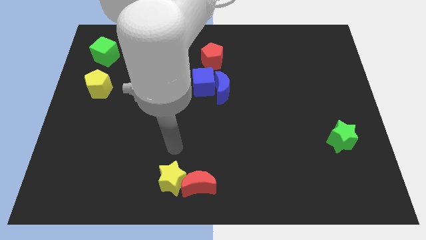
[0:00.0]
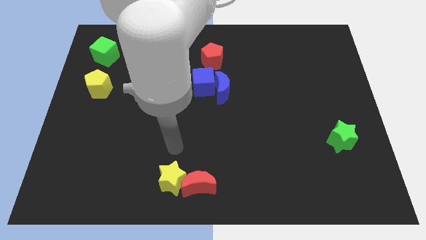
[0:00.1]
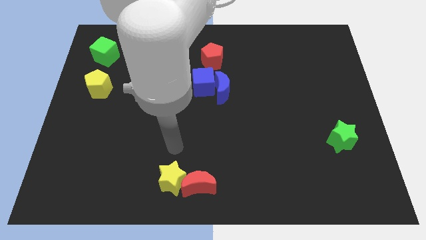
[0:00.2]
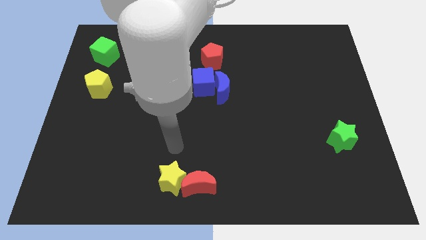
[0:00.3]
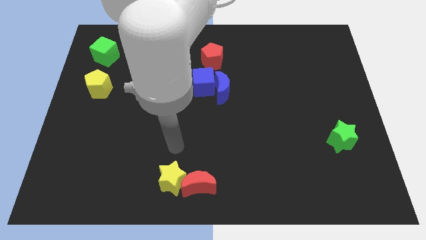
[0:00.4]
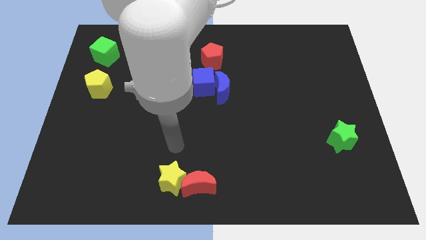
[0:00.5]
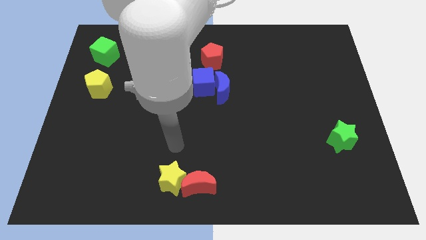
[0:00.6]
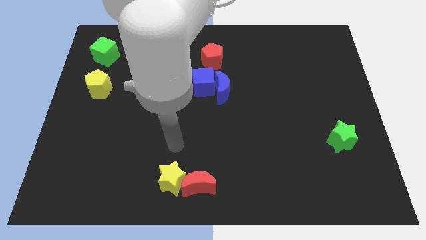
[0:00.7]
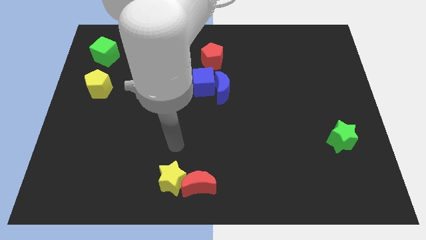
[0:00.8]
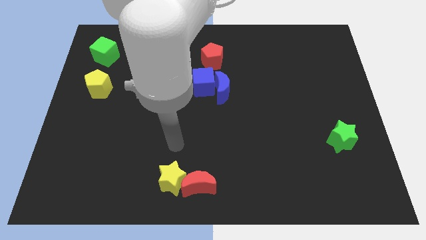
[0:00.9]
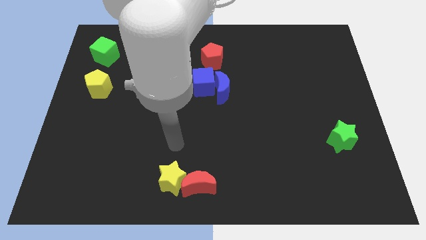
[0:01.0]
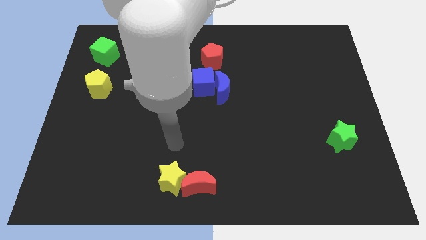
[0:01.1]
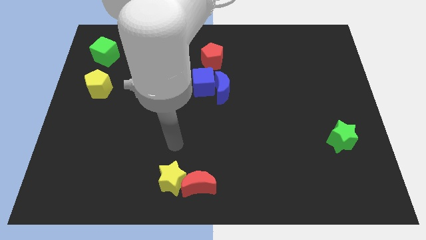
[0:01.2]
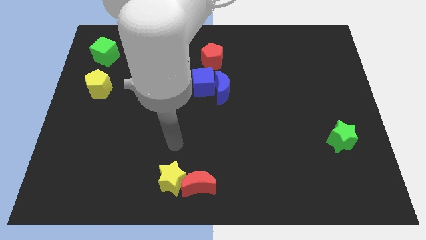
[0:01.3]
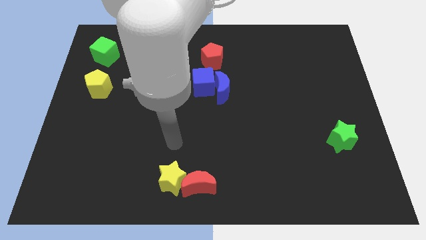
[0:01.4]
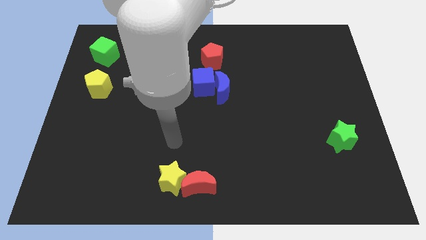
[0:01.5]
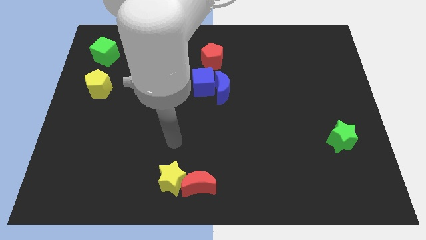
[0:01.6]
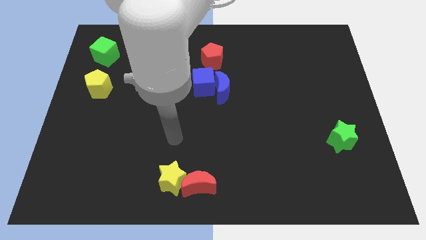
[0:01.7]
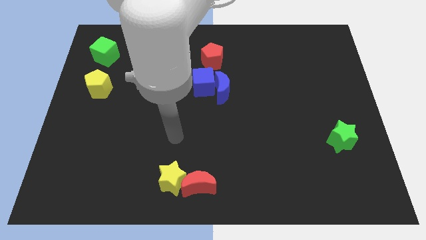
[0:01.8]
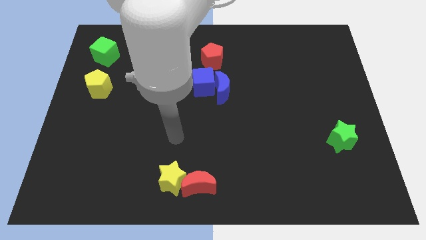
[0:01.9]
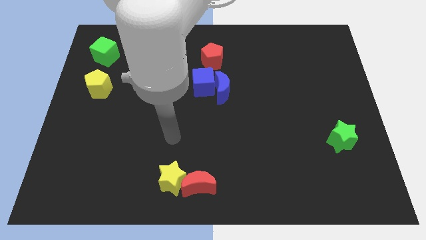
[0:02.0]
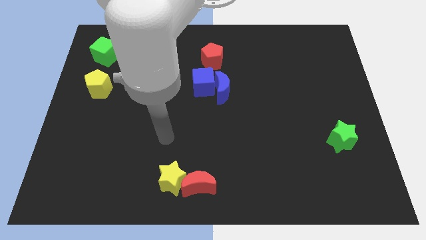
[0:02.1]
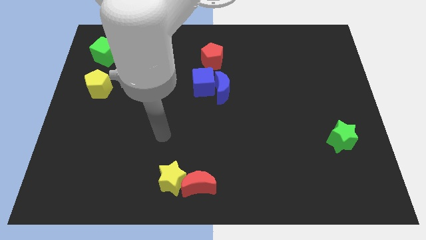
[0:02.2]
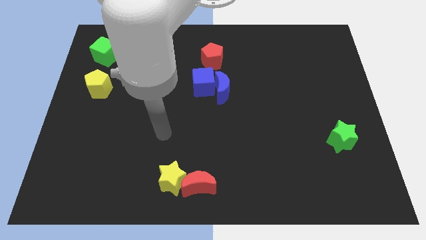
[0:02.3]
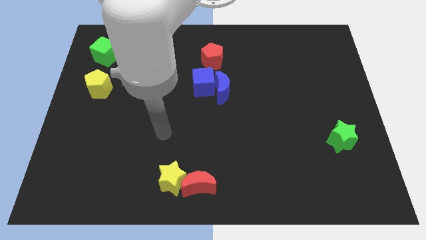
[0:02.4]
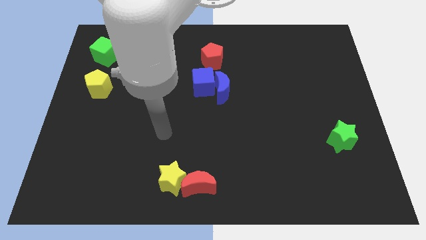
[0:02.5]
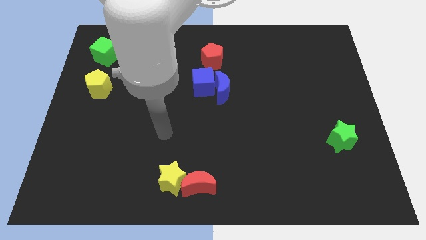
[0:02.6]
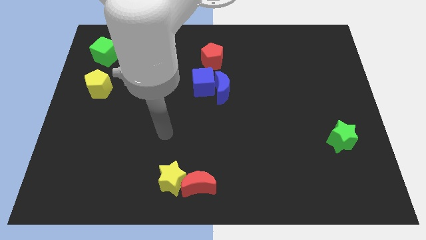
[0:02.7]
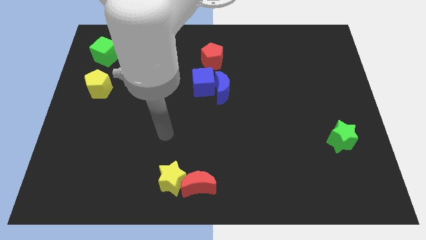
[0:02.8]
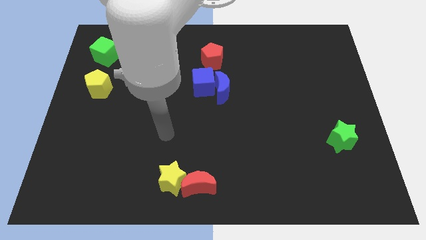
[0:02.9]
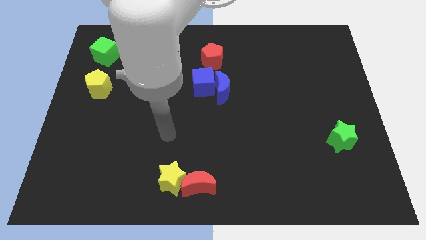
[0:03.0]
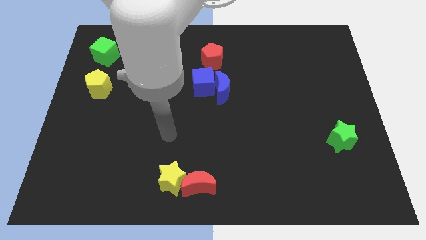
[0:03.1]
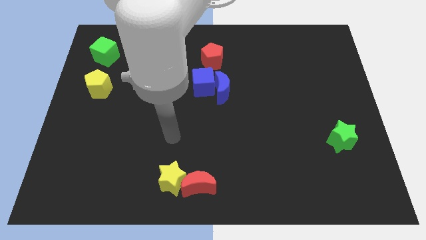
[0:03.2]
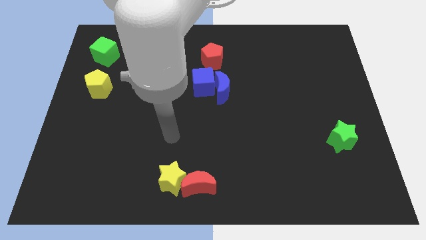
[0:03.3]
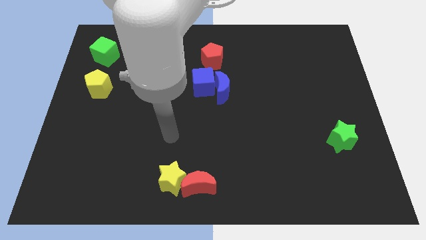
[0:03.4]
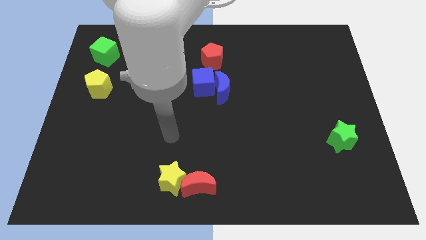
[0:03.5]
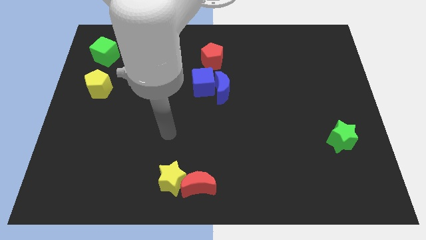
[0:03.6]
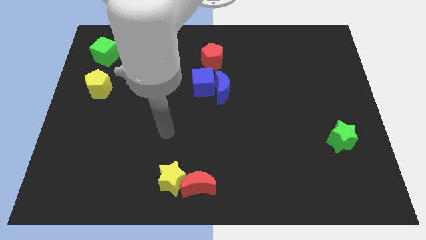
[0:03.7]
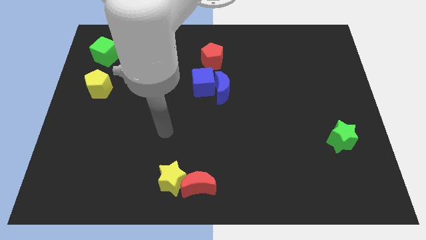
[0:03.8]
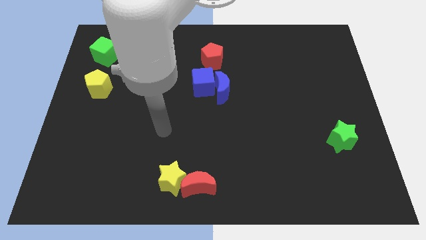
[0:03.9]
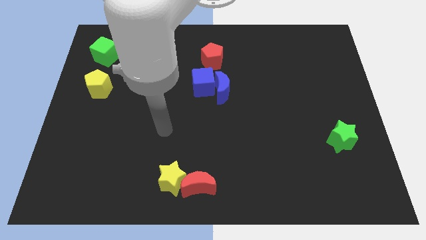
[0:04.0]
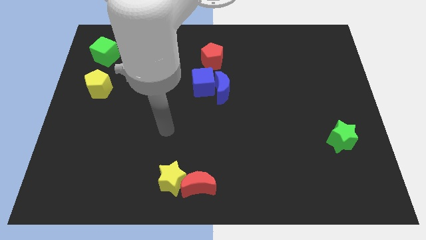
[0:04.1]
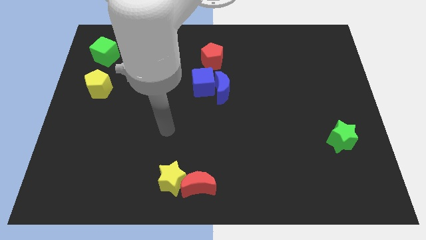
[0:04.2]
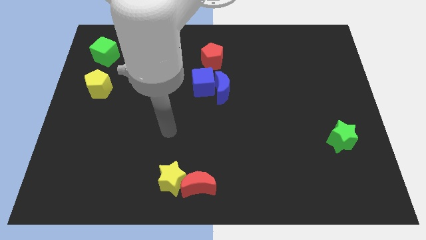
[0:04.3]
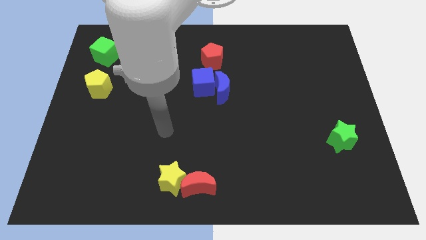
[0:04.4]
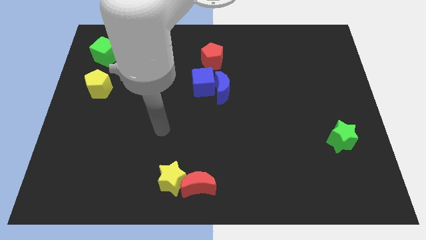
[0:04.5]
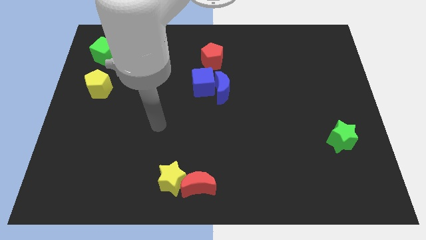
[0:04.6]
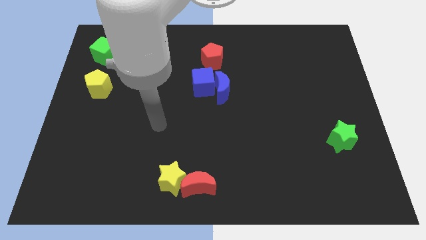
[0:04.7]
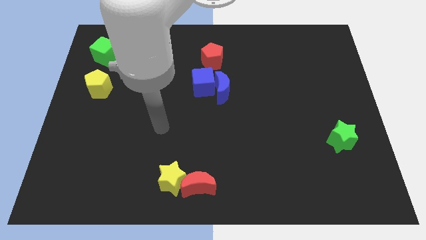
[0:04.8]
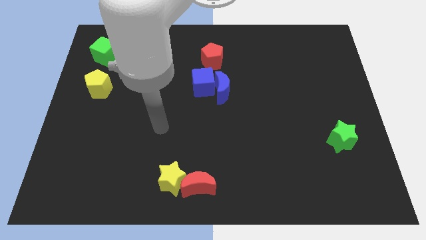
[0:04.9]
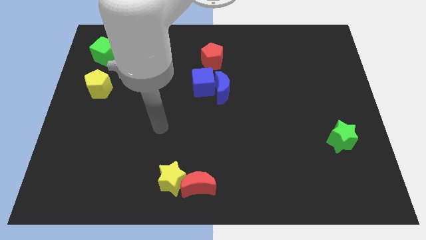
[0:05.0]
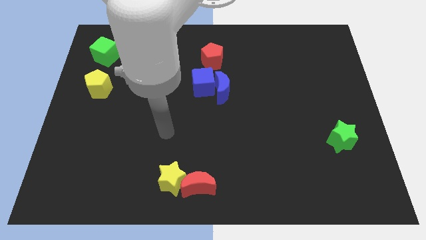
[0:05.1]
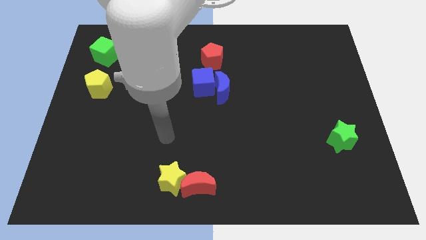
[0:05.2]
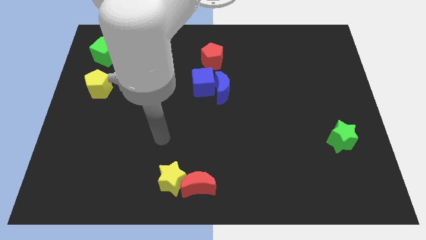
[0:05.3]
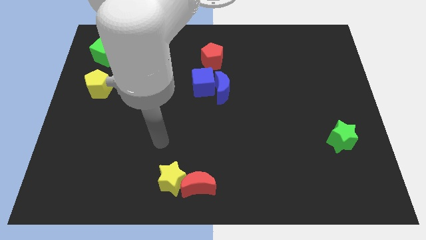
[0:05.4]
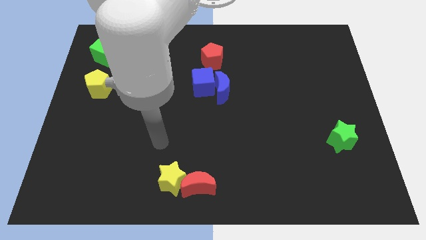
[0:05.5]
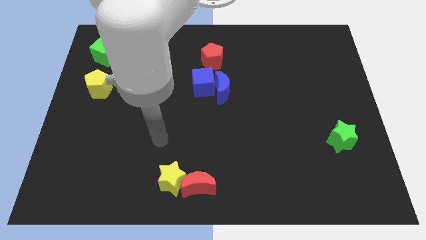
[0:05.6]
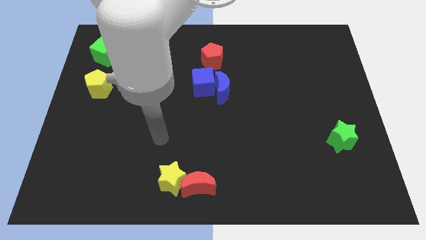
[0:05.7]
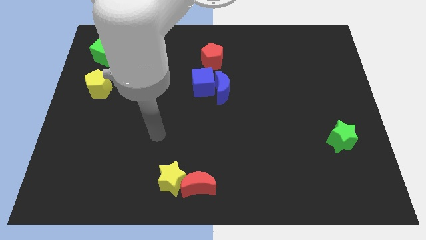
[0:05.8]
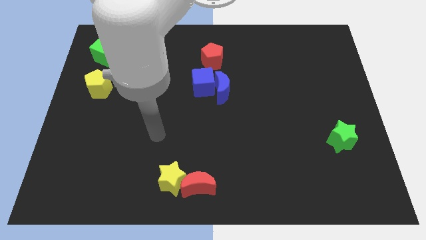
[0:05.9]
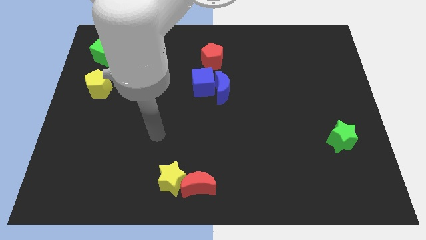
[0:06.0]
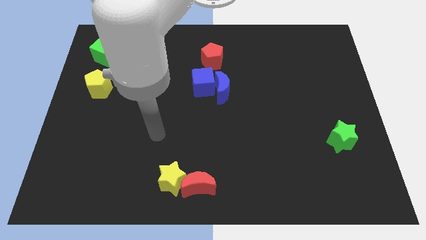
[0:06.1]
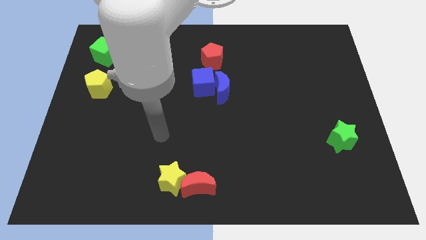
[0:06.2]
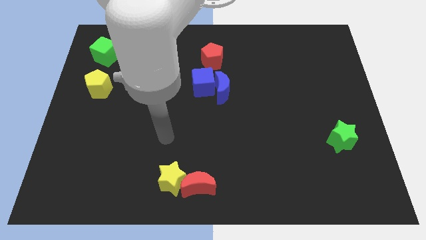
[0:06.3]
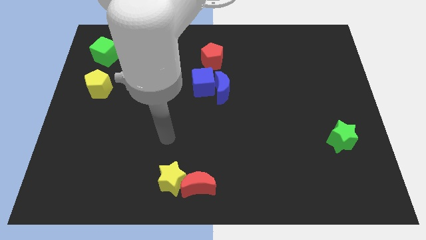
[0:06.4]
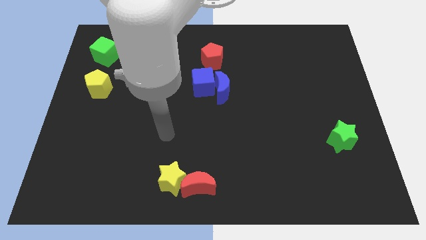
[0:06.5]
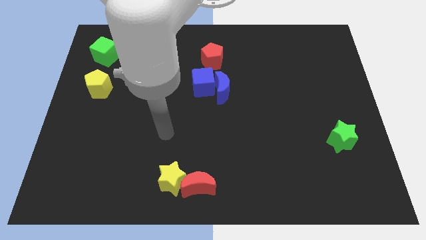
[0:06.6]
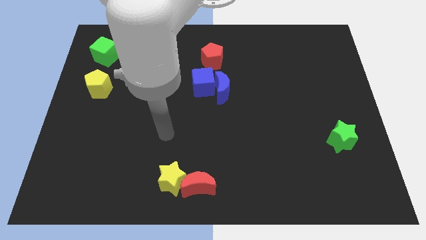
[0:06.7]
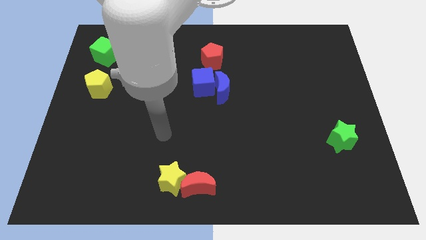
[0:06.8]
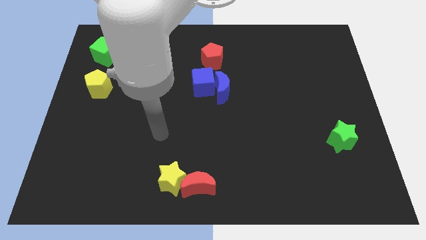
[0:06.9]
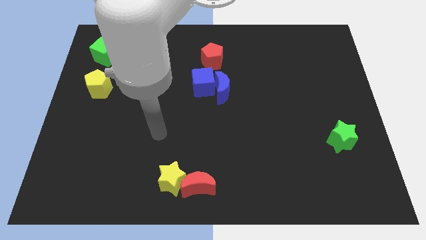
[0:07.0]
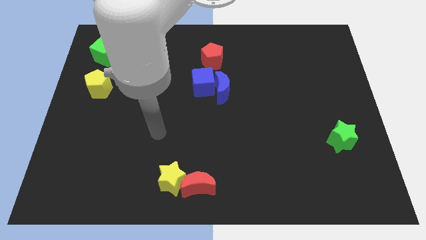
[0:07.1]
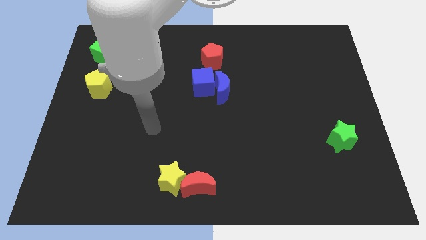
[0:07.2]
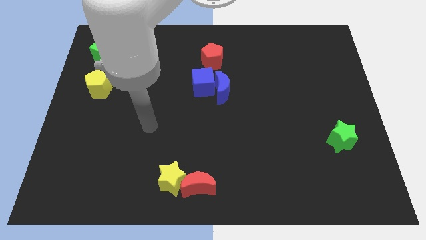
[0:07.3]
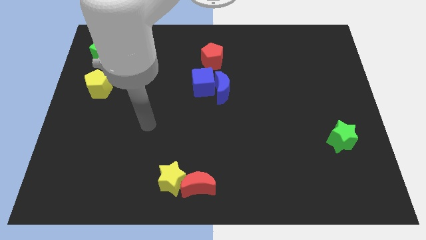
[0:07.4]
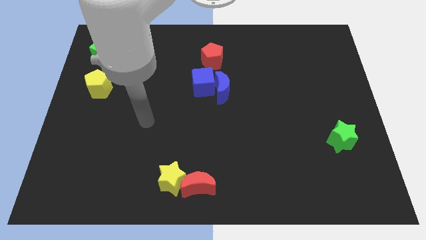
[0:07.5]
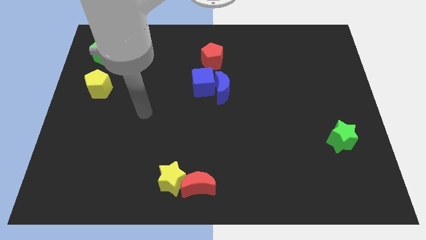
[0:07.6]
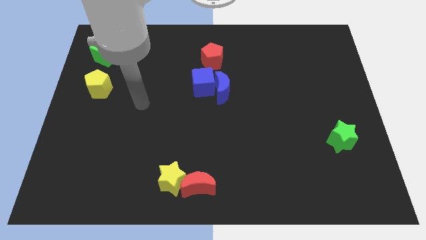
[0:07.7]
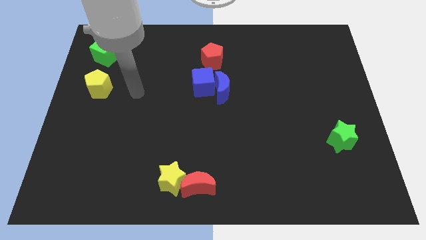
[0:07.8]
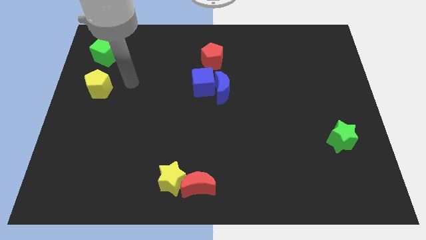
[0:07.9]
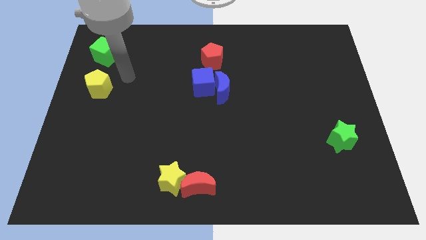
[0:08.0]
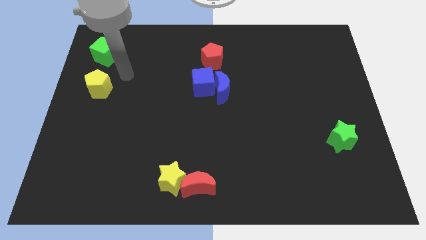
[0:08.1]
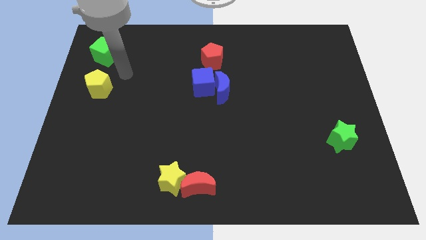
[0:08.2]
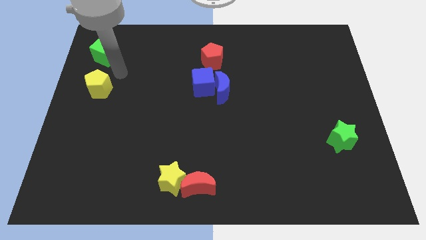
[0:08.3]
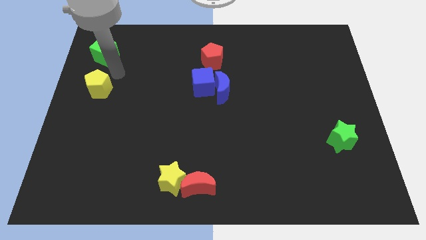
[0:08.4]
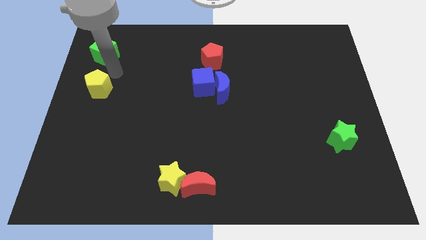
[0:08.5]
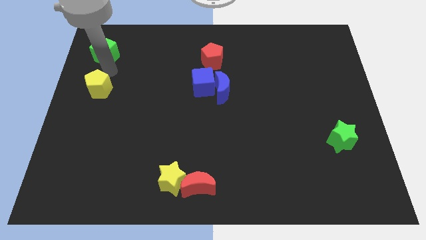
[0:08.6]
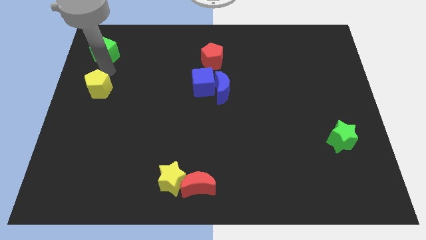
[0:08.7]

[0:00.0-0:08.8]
place the hand in between green cube and yellow pentagon

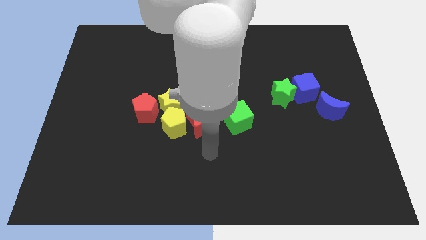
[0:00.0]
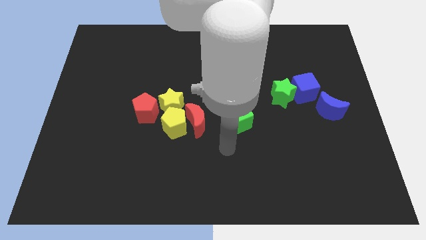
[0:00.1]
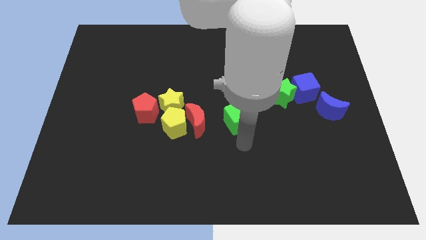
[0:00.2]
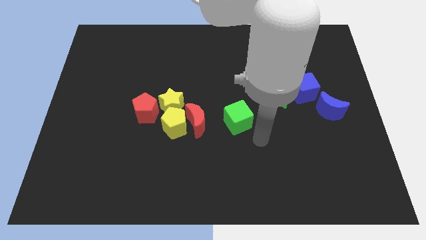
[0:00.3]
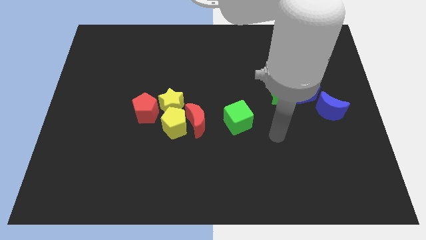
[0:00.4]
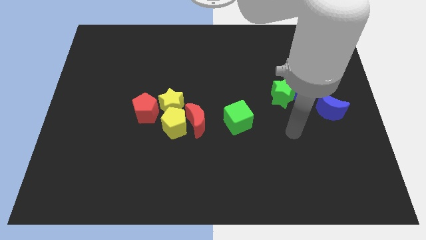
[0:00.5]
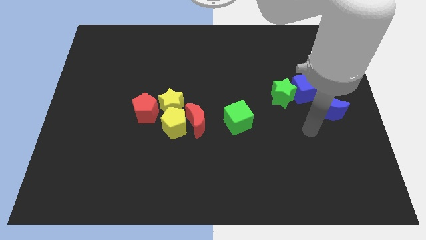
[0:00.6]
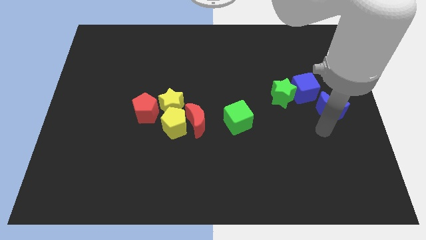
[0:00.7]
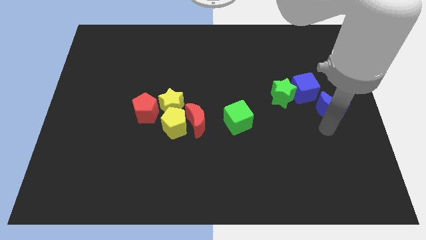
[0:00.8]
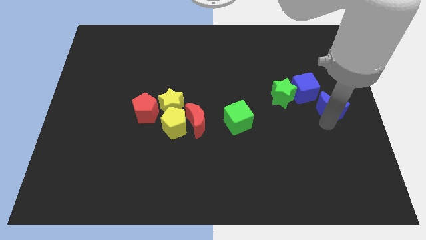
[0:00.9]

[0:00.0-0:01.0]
place the arm below the blue crescent
